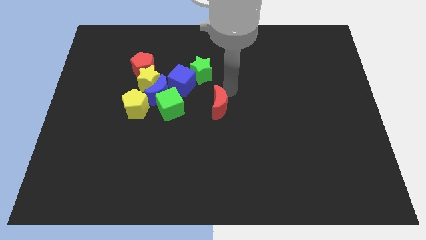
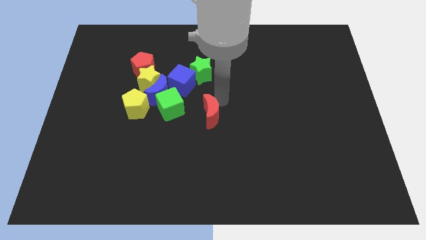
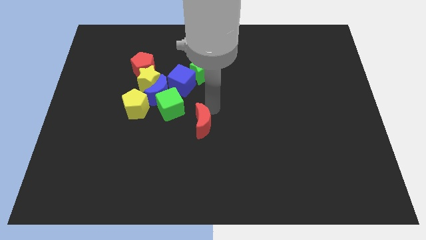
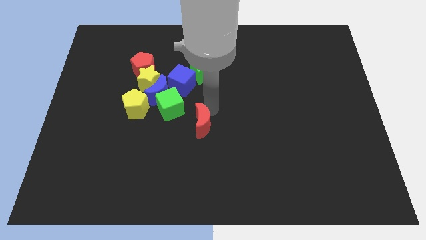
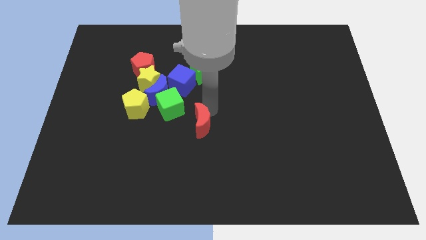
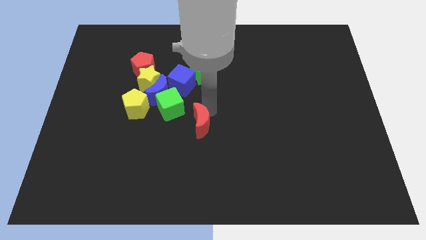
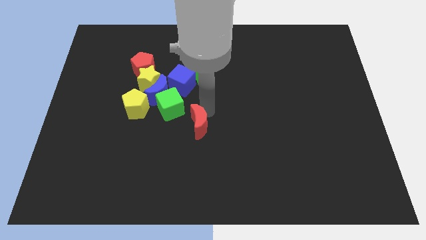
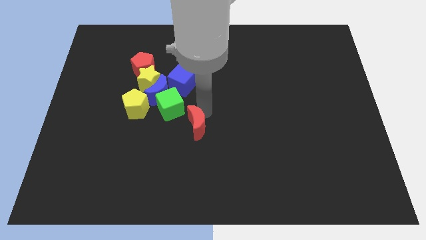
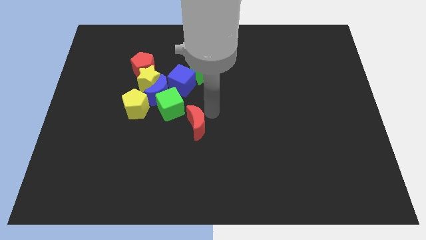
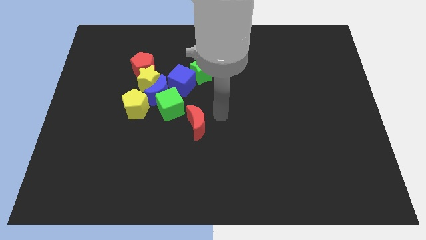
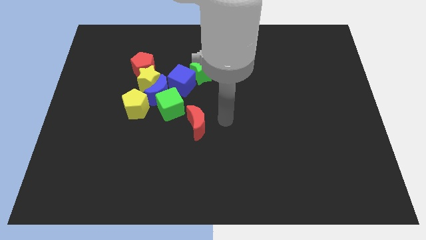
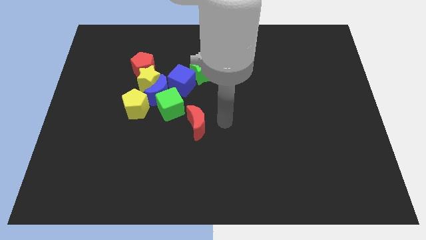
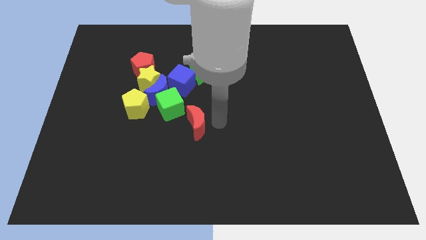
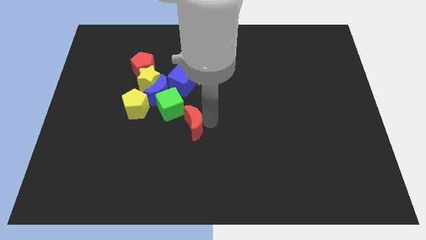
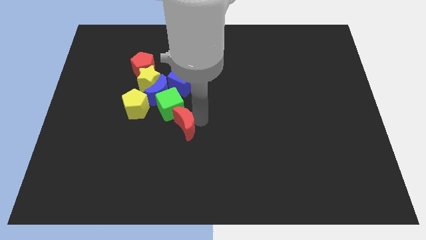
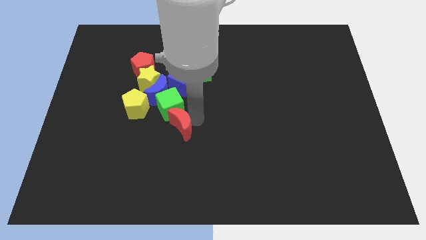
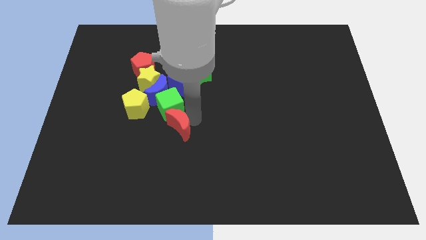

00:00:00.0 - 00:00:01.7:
place the red crescent below the green cube

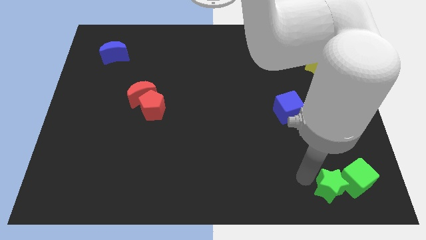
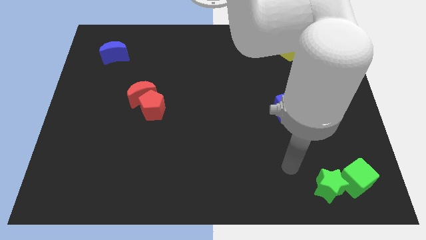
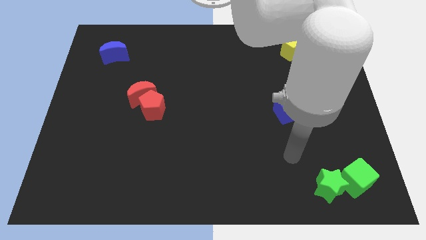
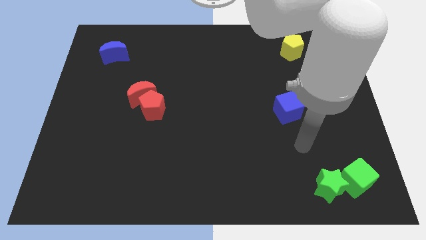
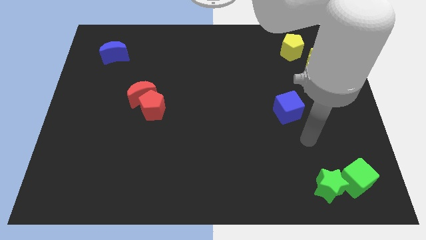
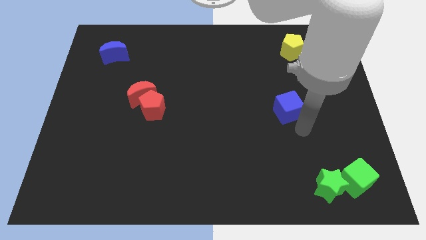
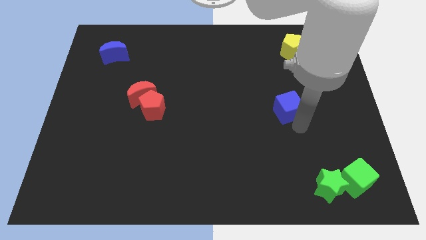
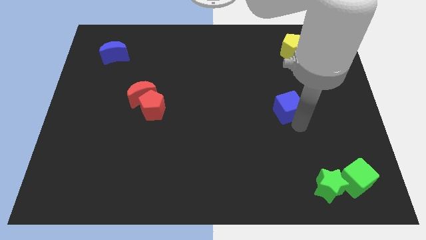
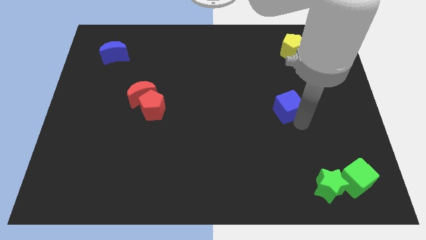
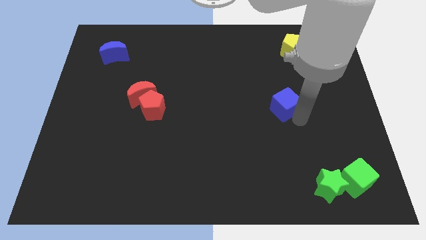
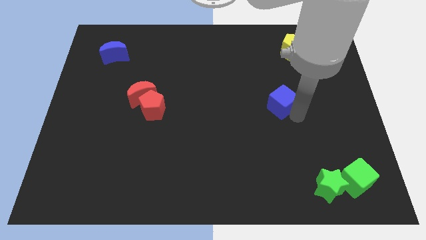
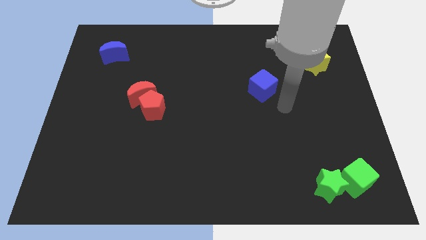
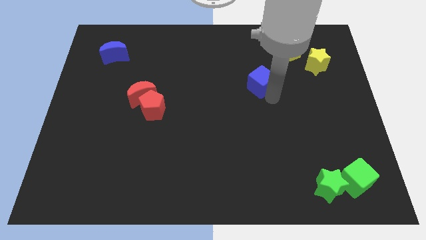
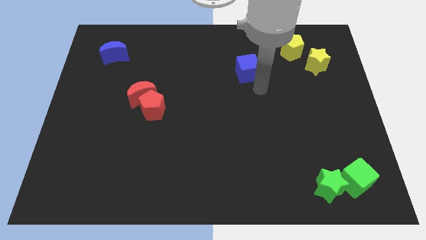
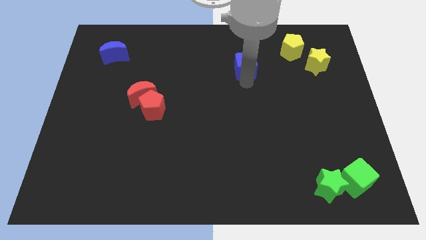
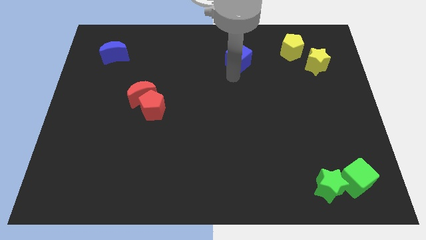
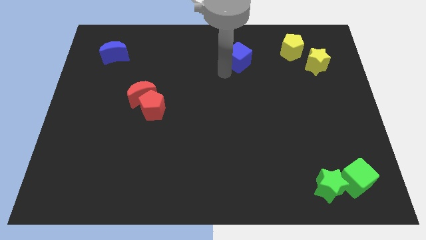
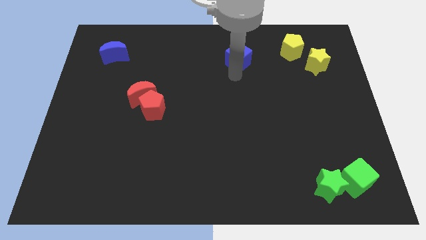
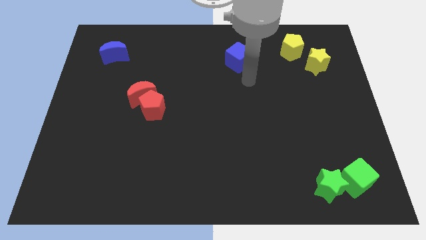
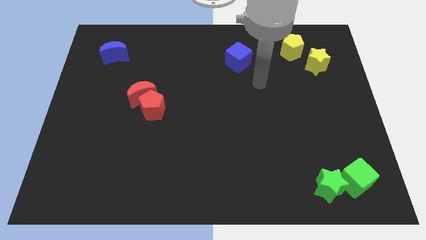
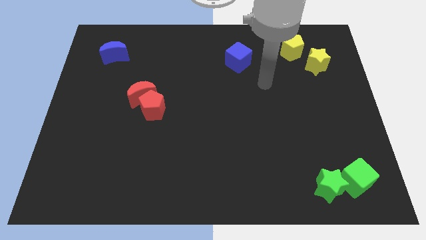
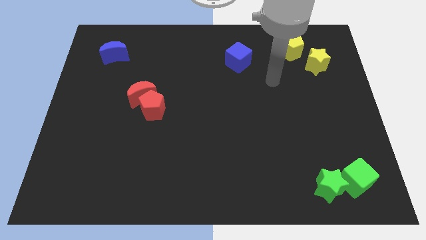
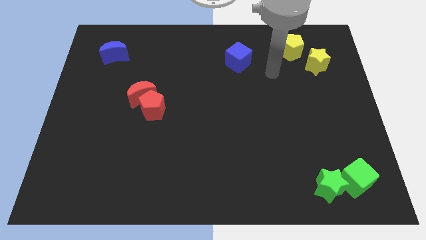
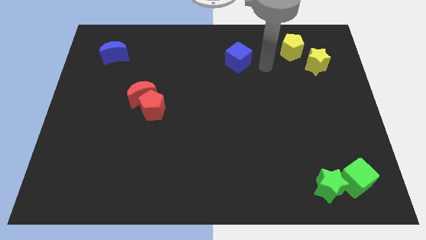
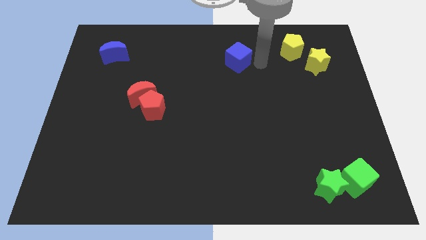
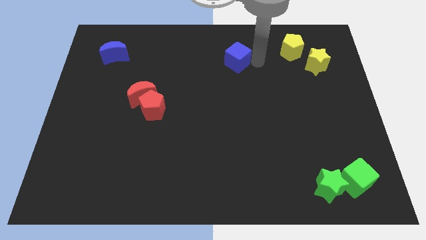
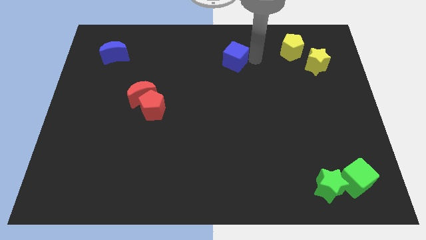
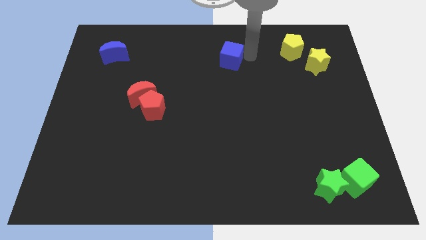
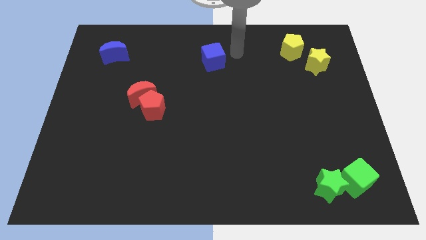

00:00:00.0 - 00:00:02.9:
move the blue cube towards top center of the board

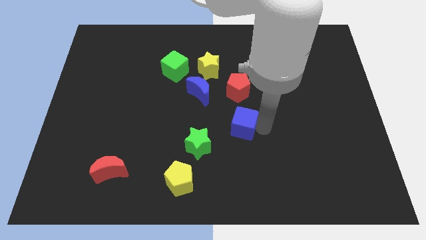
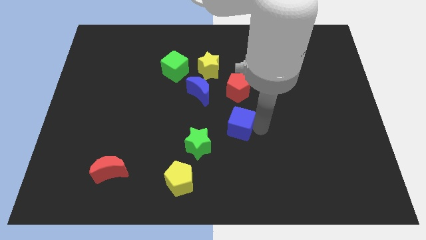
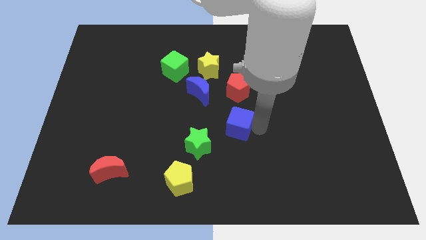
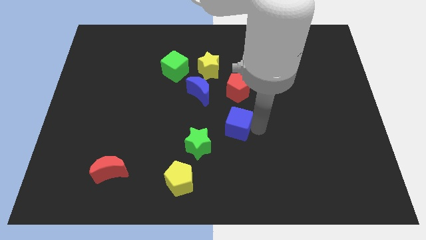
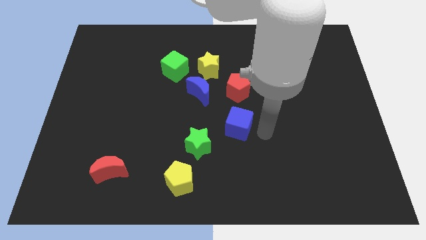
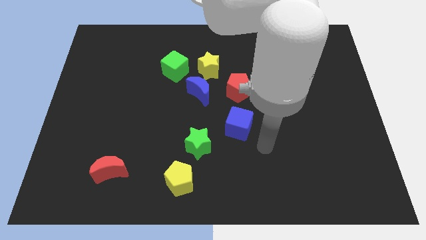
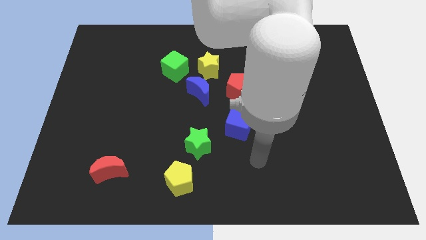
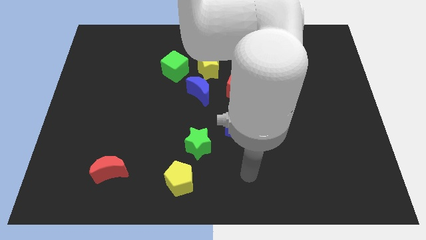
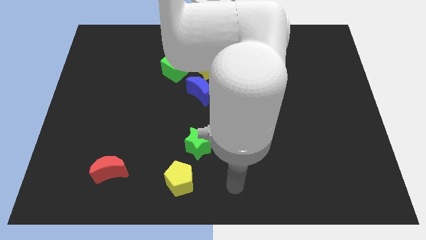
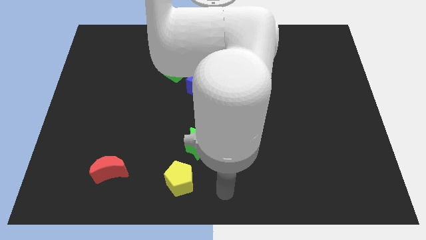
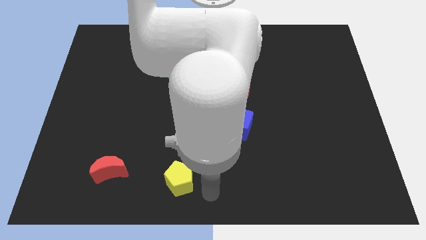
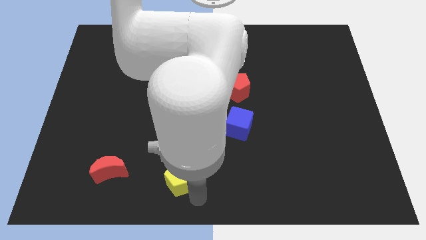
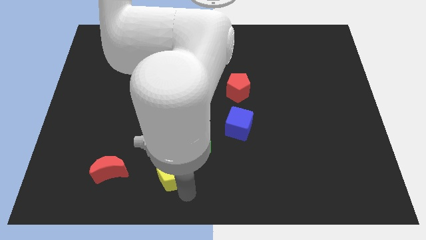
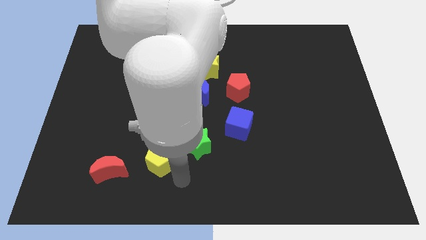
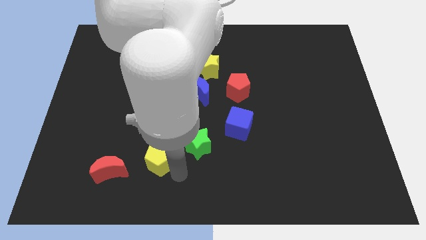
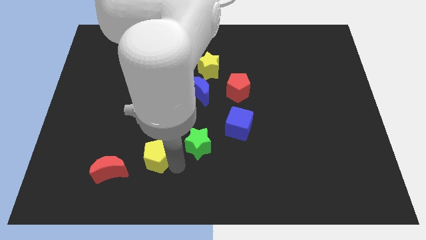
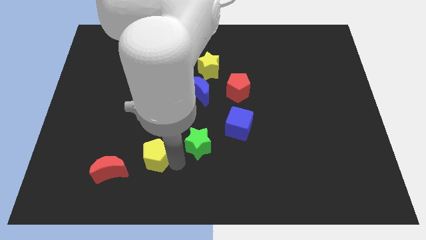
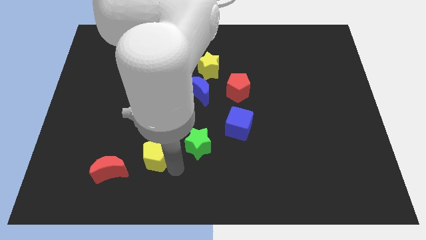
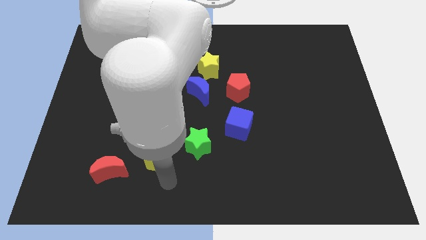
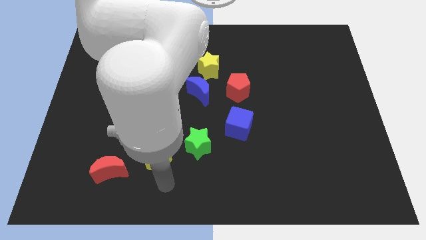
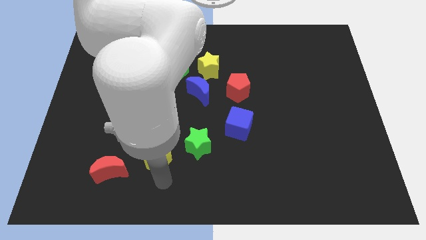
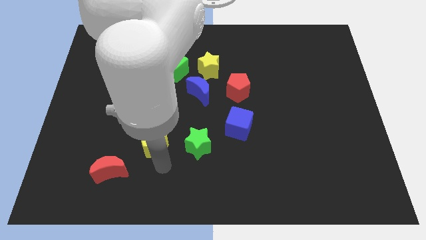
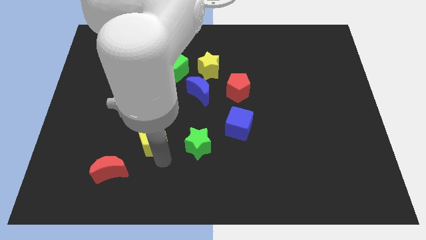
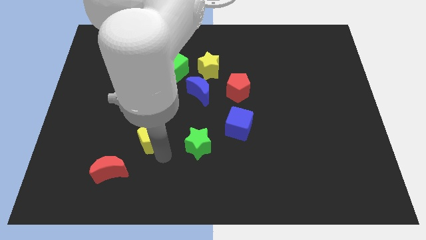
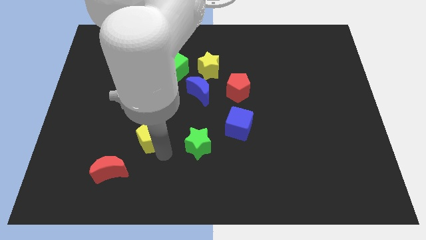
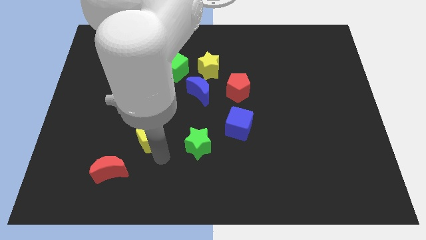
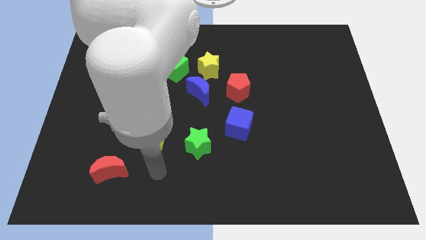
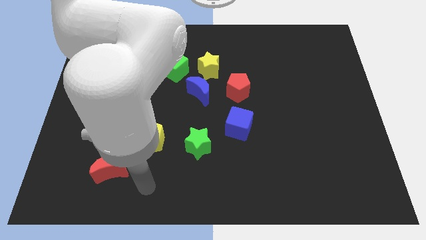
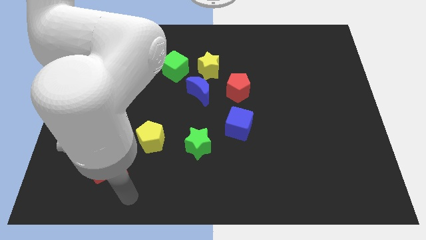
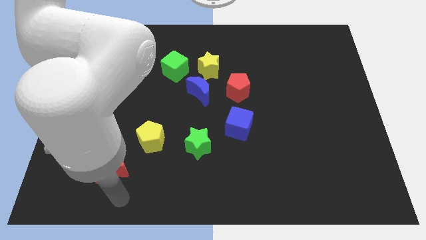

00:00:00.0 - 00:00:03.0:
move the yellow pentagon to the left of the green star

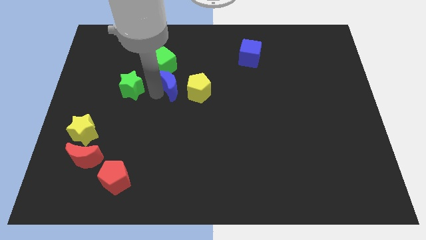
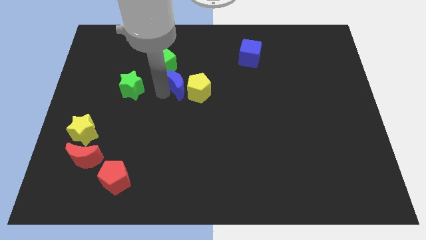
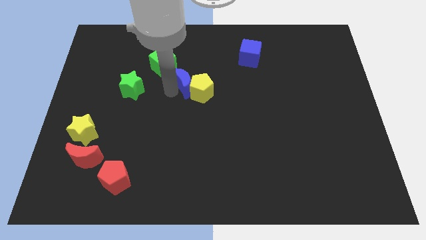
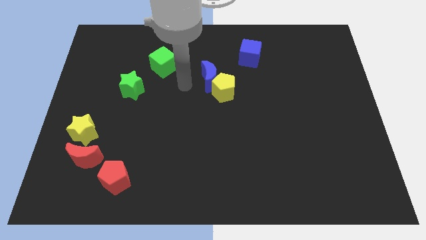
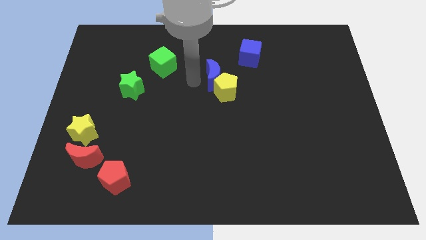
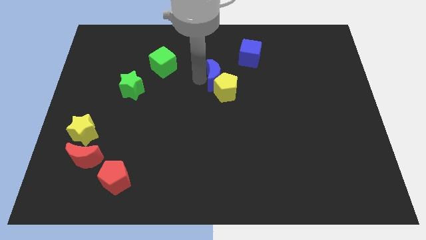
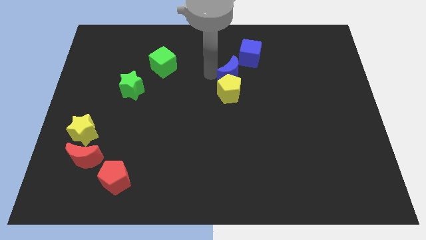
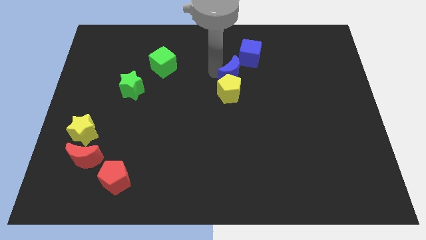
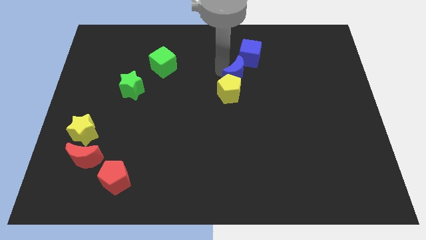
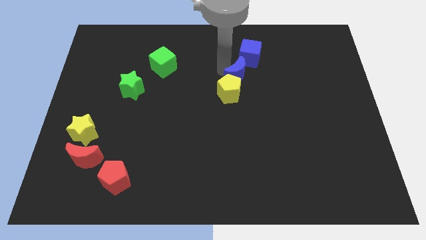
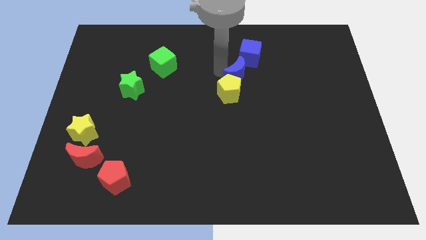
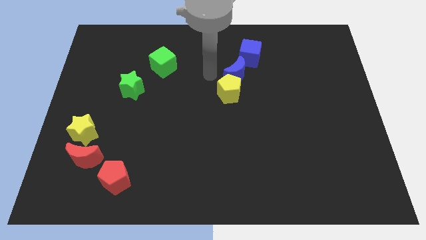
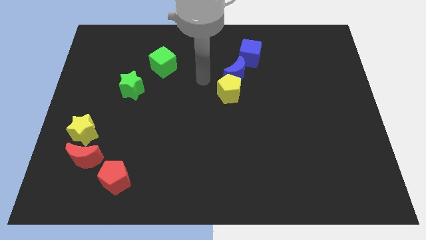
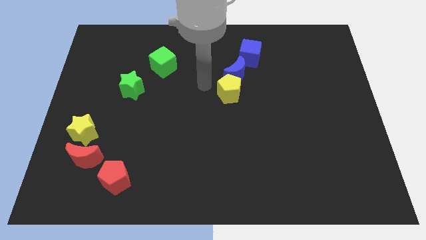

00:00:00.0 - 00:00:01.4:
place blue moon to the bottom of blue cube
